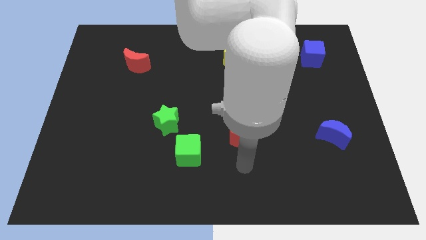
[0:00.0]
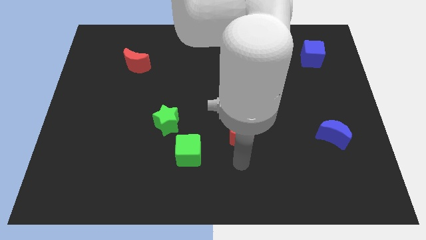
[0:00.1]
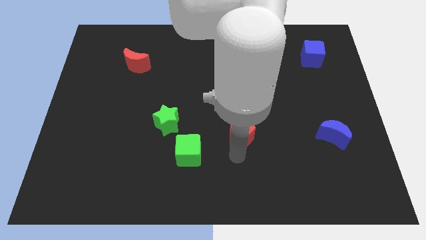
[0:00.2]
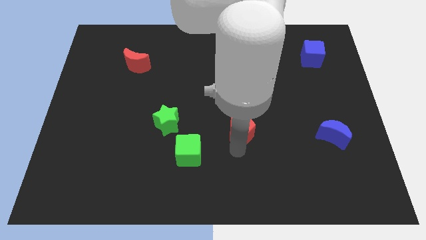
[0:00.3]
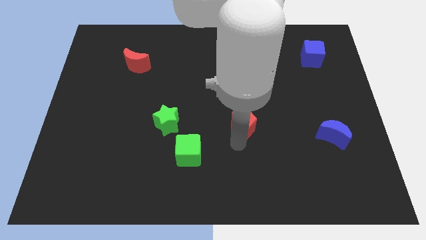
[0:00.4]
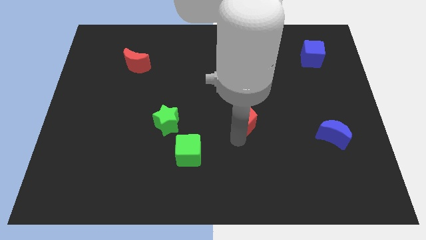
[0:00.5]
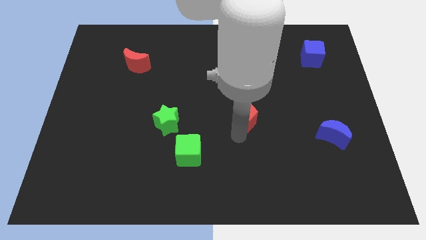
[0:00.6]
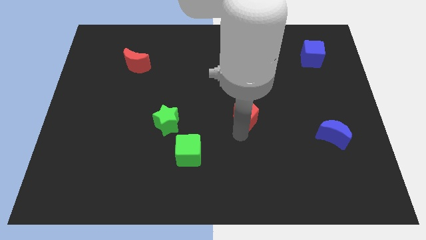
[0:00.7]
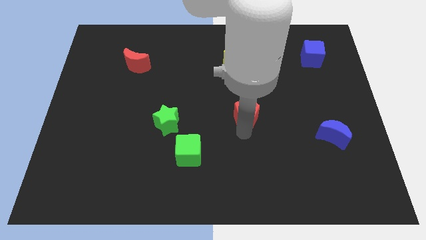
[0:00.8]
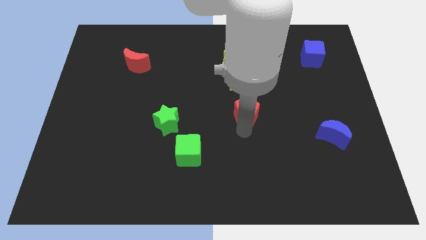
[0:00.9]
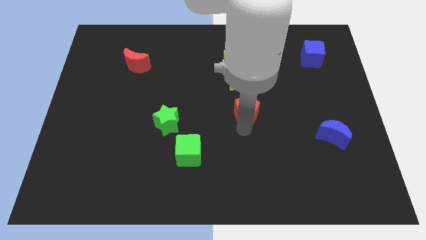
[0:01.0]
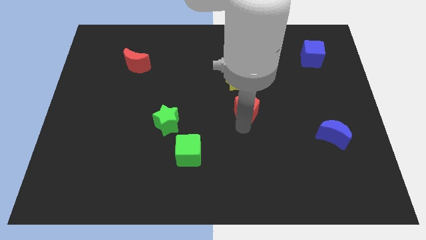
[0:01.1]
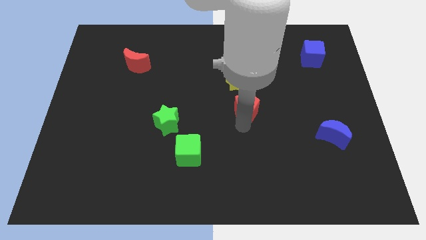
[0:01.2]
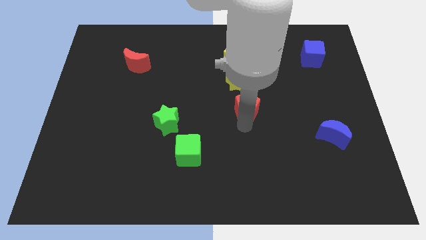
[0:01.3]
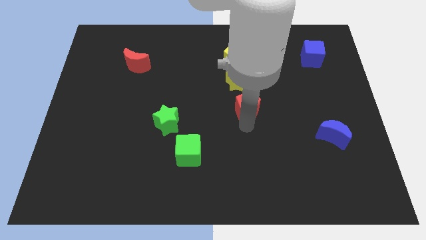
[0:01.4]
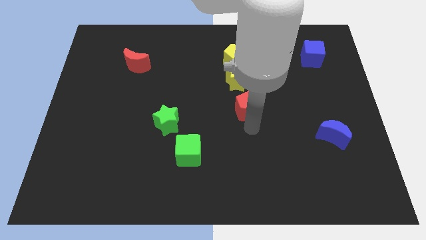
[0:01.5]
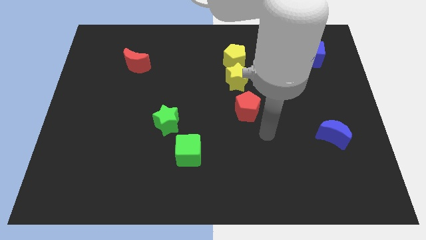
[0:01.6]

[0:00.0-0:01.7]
push red pentagon towards yellow star

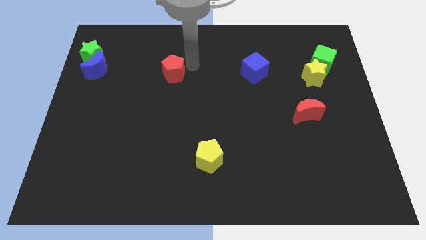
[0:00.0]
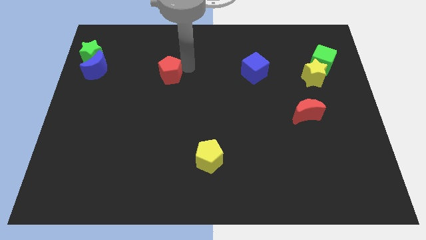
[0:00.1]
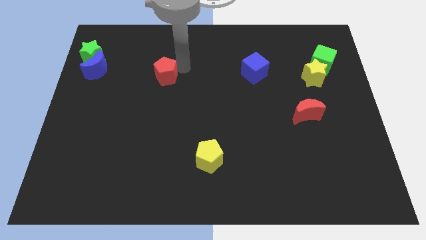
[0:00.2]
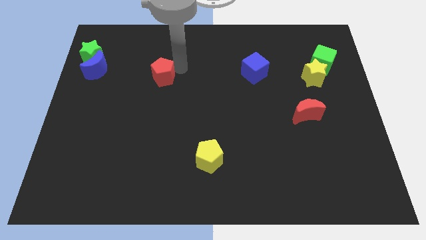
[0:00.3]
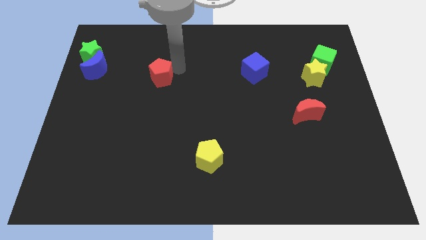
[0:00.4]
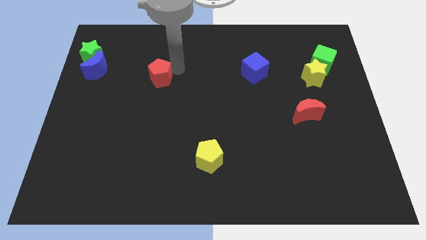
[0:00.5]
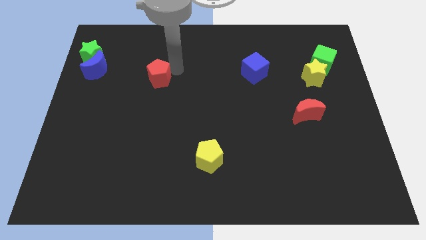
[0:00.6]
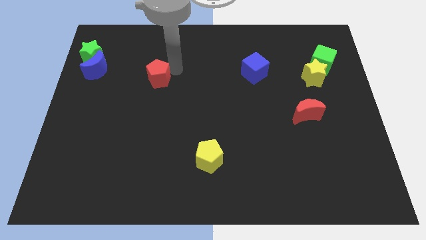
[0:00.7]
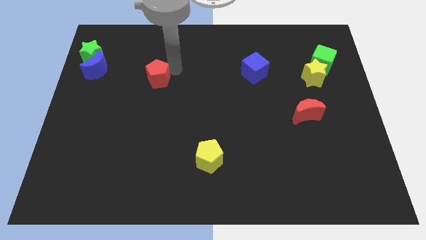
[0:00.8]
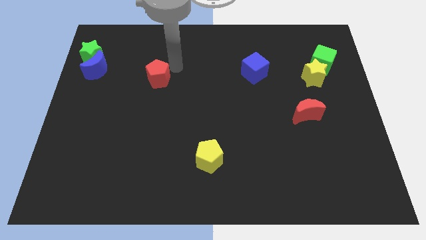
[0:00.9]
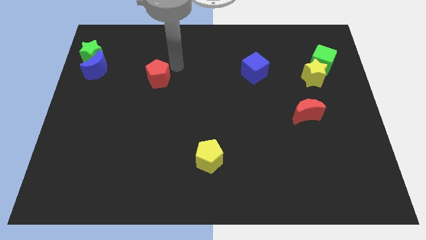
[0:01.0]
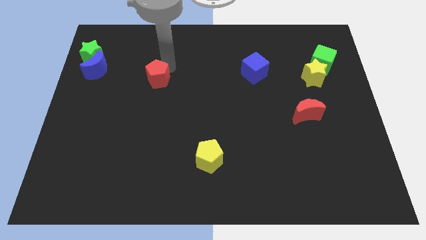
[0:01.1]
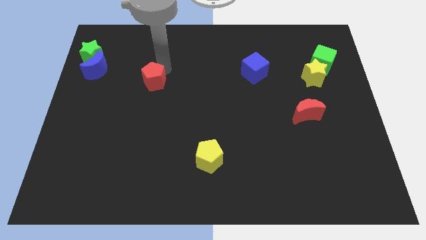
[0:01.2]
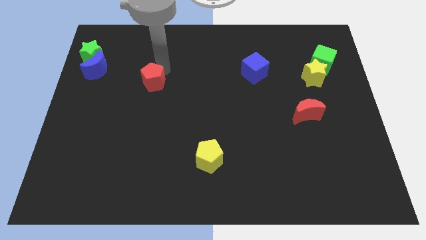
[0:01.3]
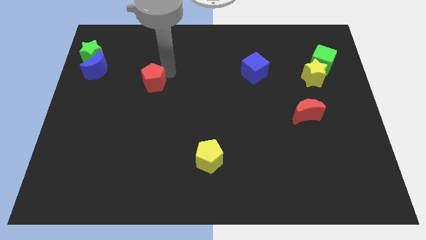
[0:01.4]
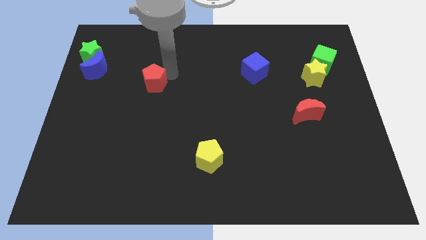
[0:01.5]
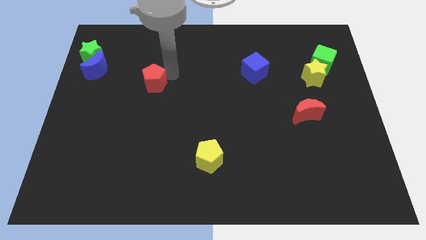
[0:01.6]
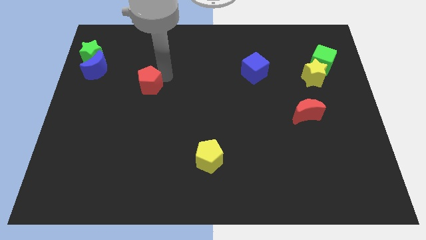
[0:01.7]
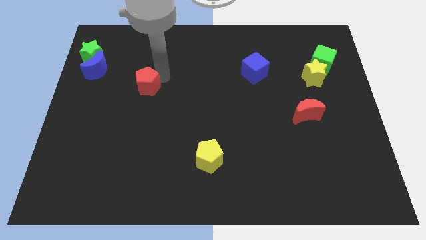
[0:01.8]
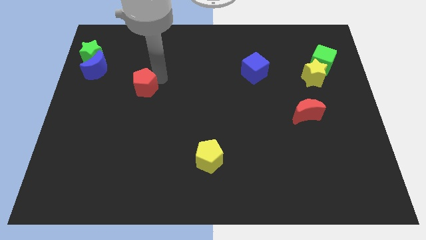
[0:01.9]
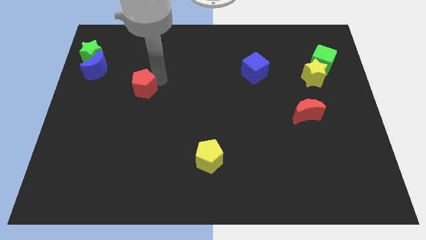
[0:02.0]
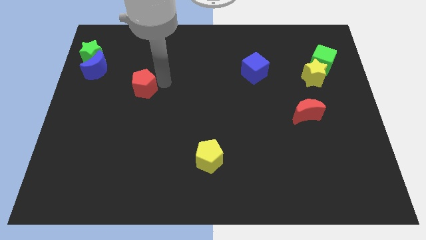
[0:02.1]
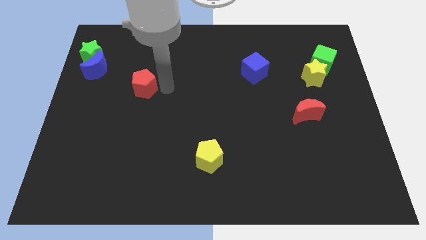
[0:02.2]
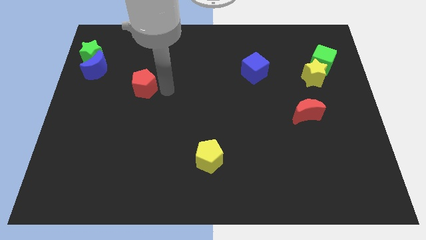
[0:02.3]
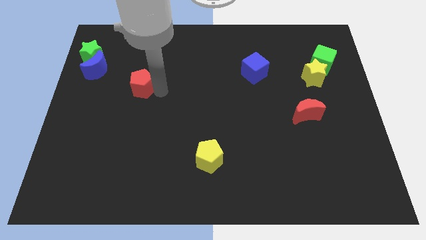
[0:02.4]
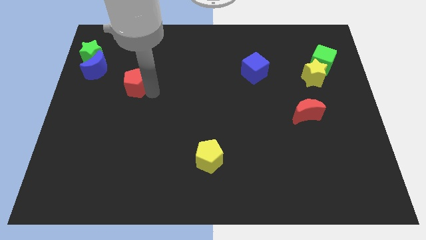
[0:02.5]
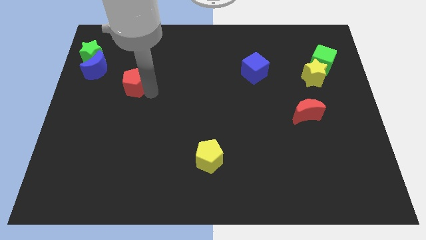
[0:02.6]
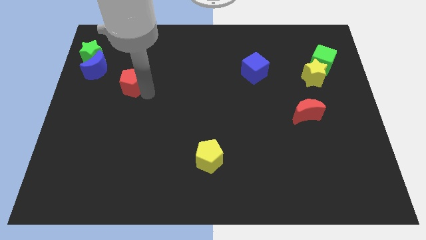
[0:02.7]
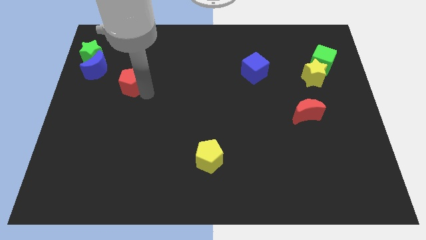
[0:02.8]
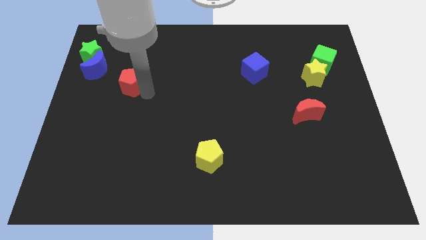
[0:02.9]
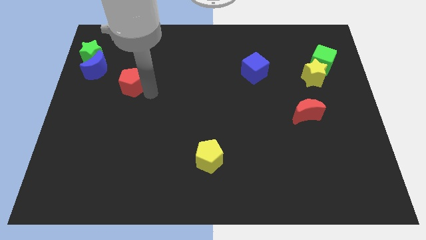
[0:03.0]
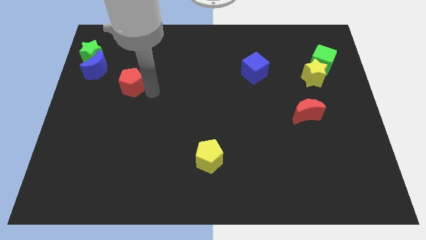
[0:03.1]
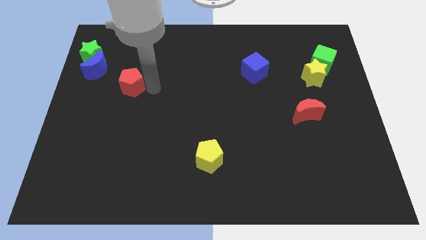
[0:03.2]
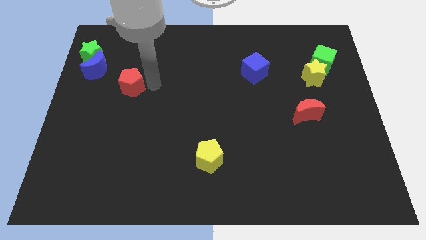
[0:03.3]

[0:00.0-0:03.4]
push the blue cube diagonally to the bottom right to the blue crescent

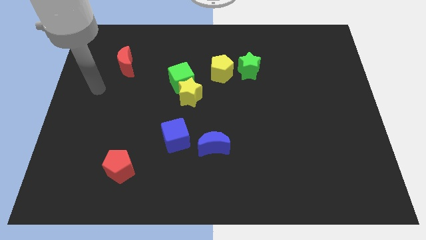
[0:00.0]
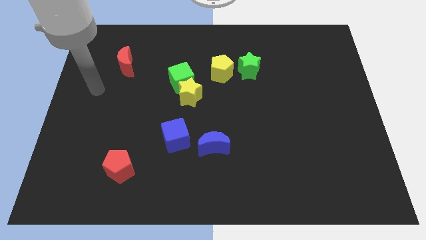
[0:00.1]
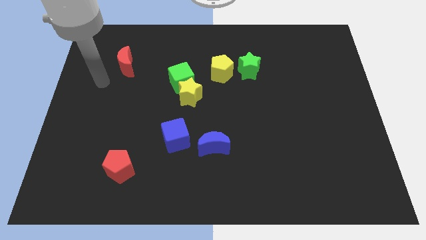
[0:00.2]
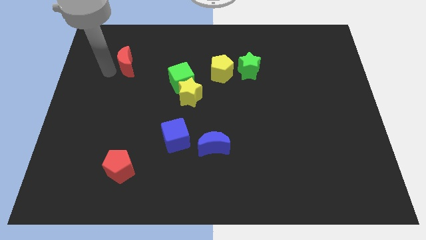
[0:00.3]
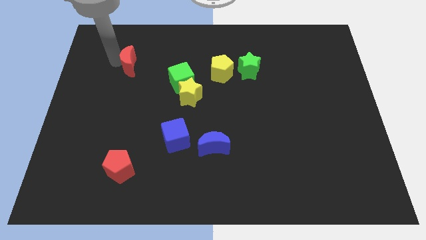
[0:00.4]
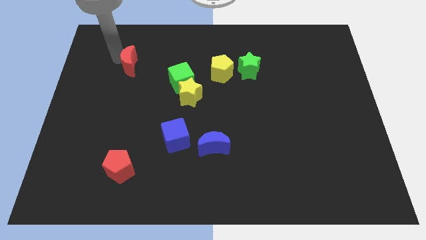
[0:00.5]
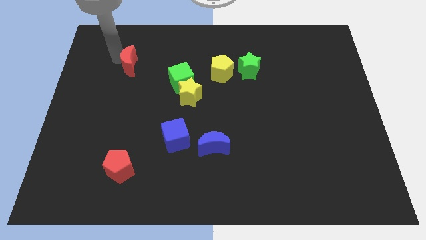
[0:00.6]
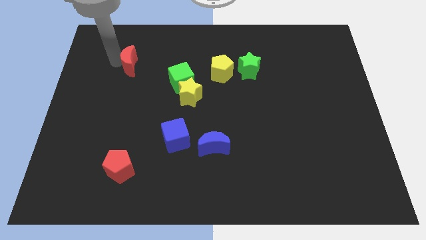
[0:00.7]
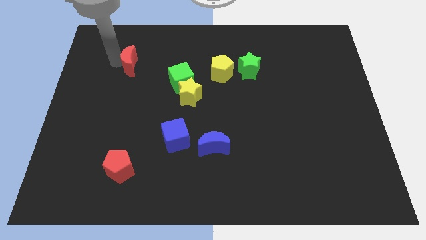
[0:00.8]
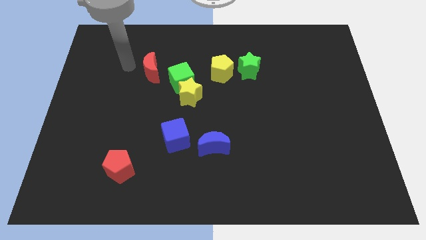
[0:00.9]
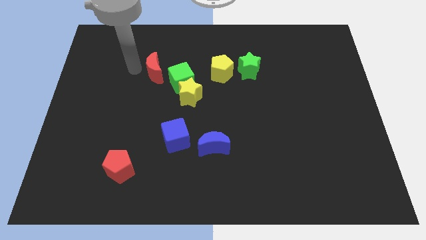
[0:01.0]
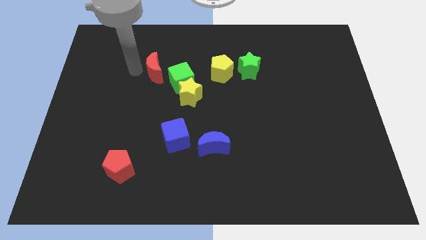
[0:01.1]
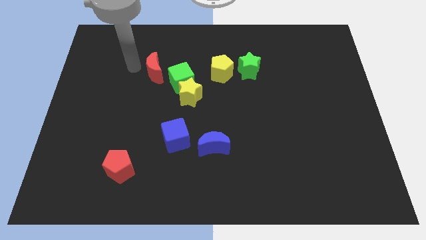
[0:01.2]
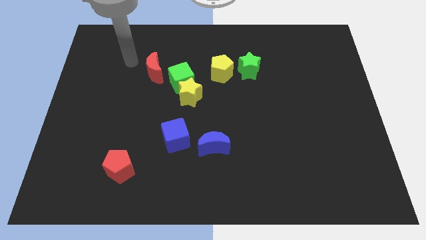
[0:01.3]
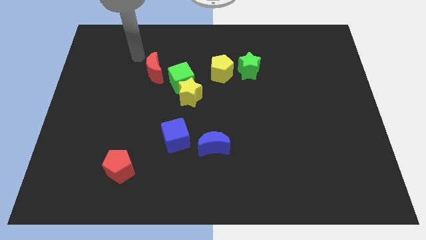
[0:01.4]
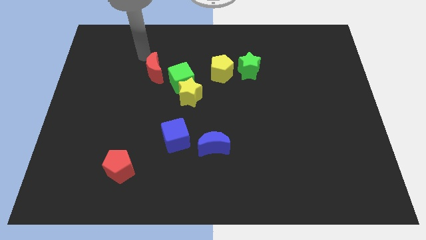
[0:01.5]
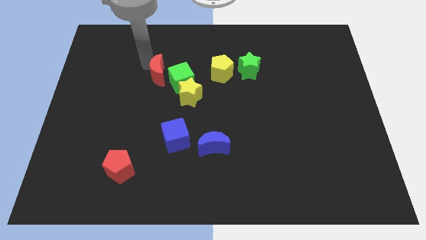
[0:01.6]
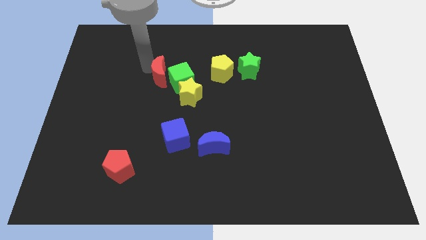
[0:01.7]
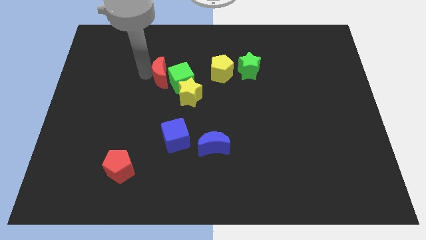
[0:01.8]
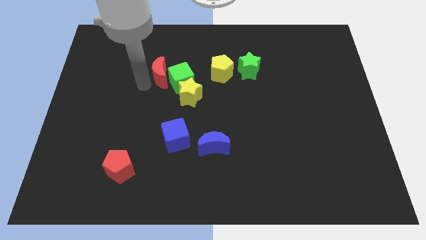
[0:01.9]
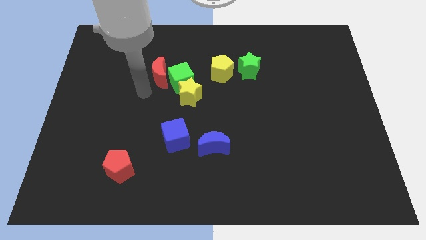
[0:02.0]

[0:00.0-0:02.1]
move red crescent to the left of the green cube

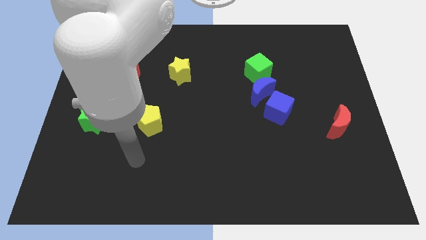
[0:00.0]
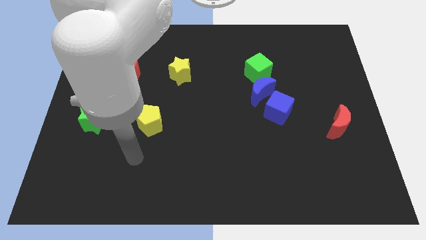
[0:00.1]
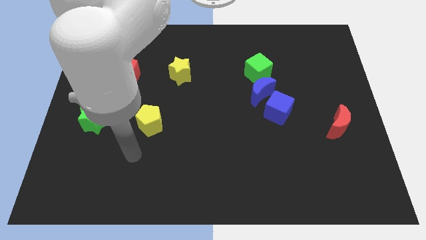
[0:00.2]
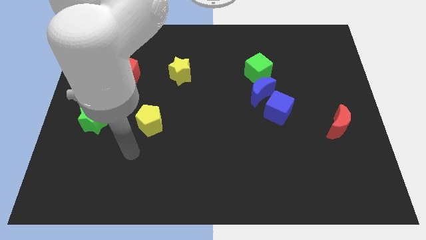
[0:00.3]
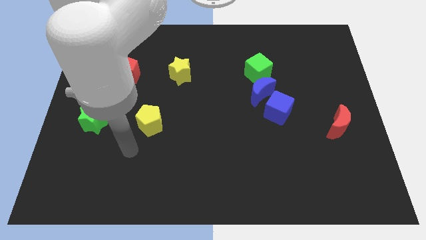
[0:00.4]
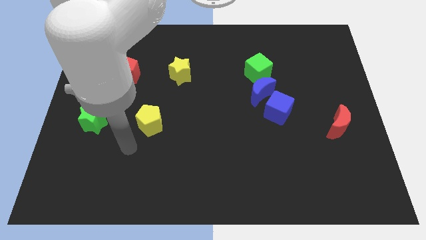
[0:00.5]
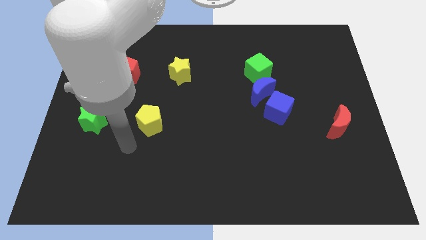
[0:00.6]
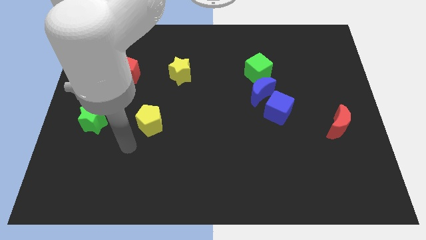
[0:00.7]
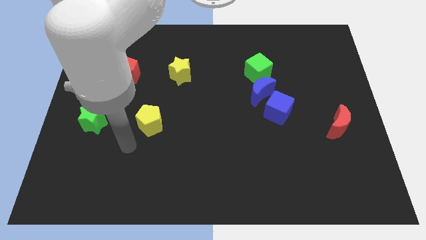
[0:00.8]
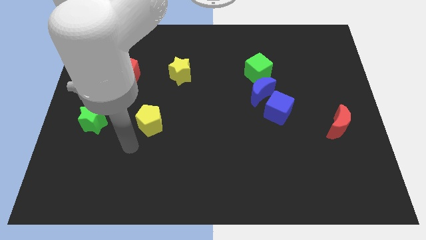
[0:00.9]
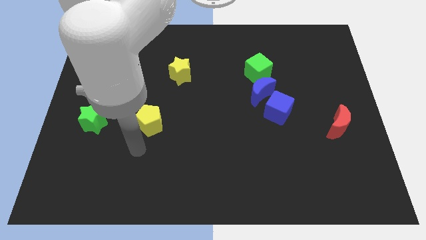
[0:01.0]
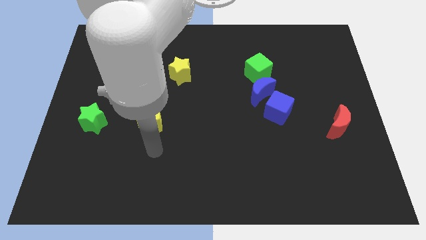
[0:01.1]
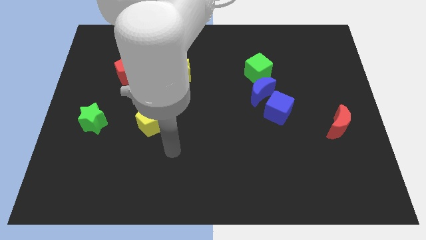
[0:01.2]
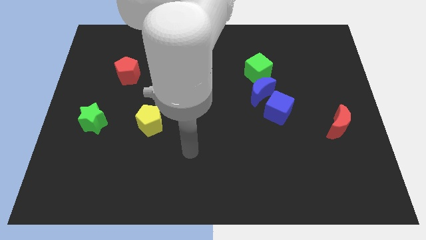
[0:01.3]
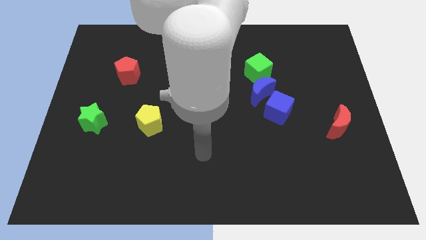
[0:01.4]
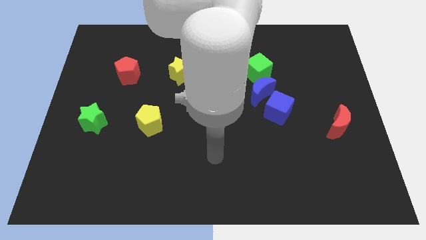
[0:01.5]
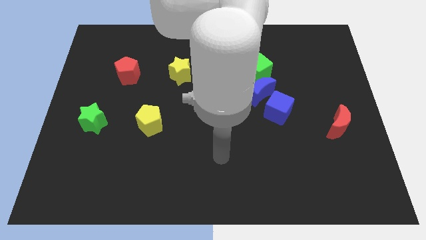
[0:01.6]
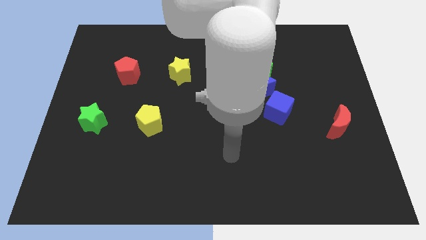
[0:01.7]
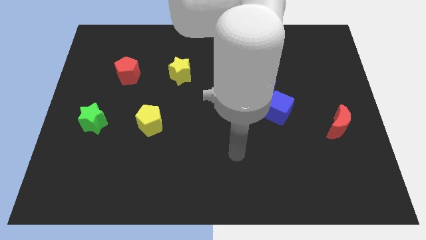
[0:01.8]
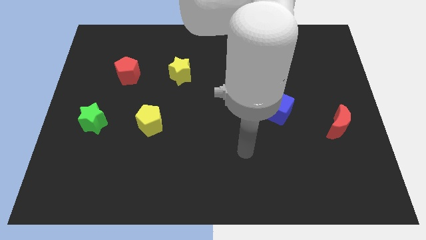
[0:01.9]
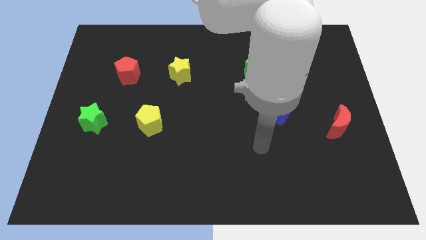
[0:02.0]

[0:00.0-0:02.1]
move your hand towards right side of the board
